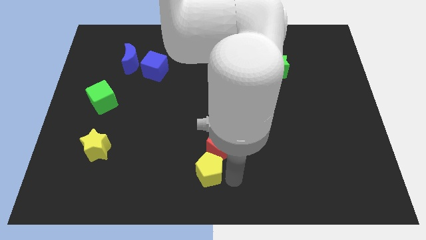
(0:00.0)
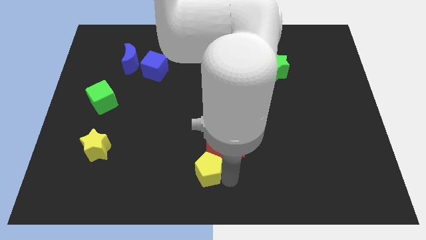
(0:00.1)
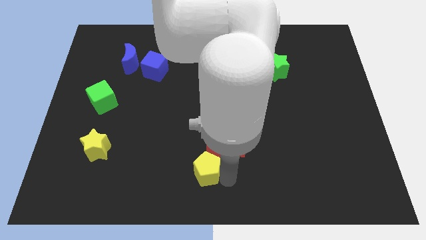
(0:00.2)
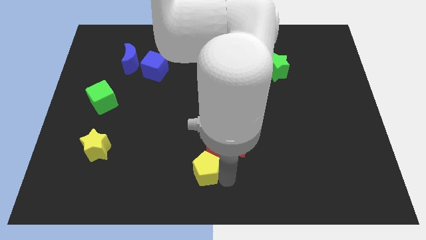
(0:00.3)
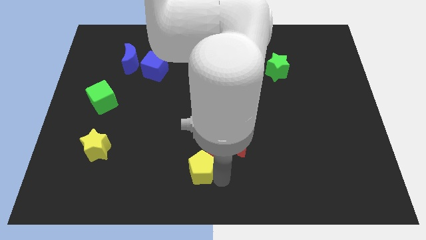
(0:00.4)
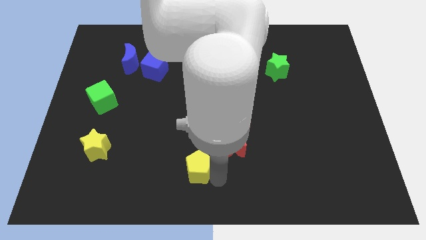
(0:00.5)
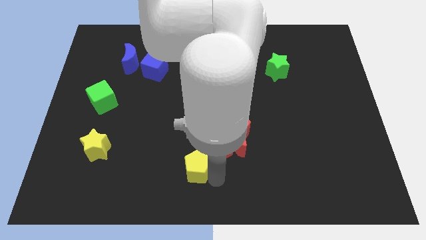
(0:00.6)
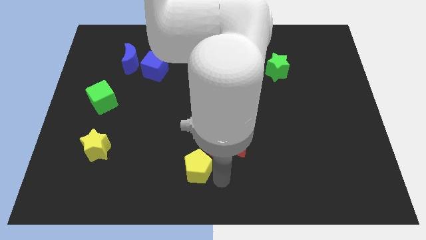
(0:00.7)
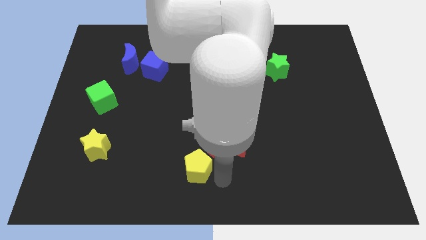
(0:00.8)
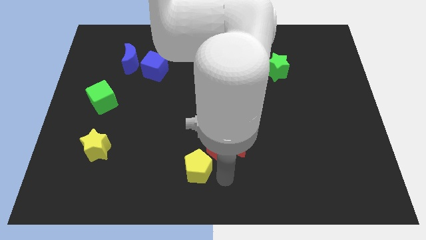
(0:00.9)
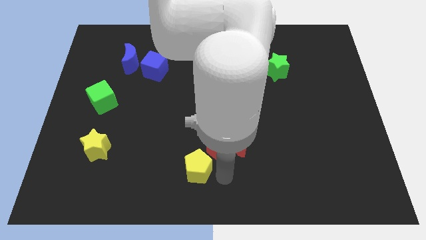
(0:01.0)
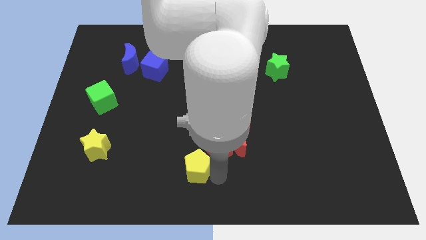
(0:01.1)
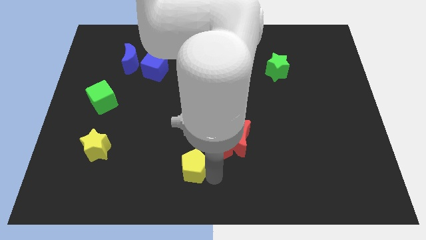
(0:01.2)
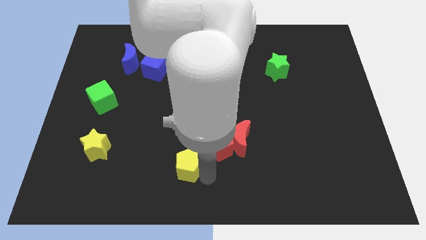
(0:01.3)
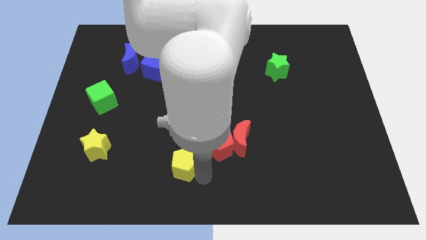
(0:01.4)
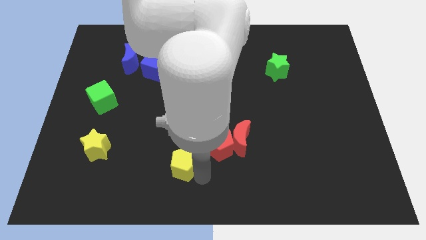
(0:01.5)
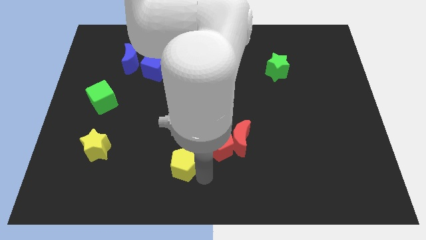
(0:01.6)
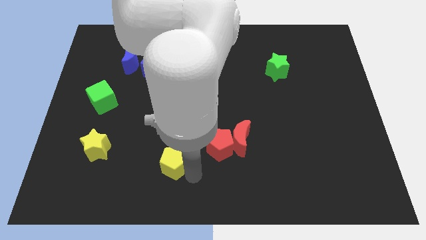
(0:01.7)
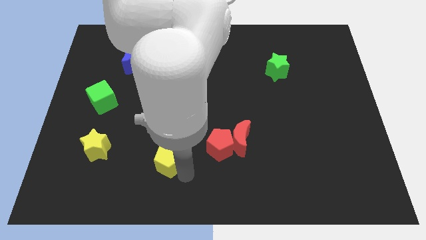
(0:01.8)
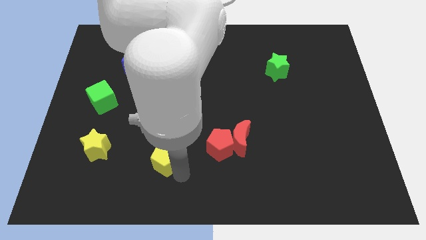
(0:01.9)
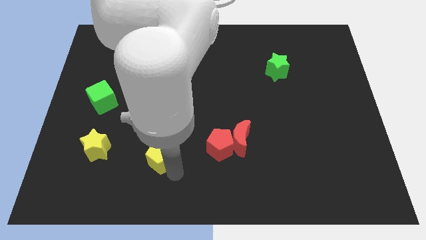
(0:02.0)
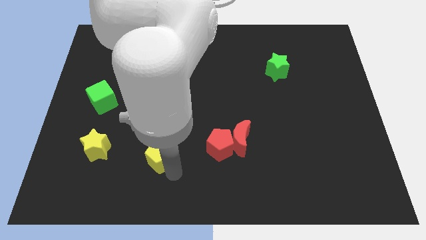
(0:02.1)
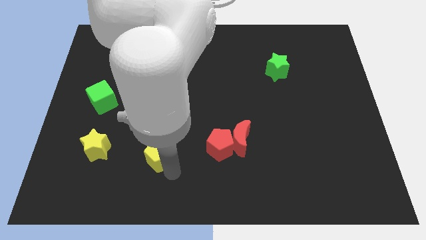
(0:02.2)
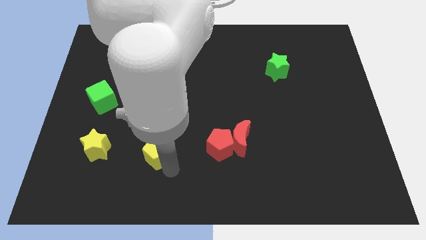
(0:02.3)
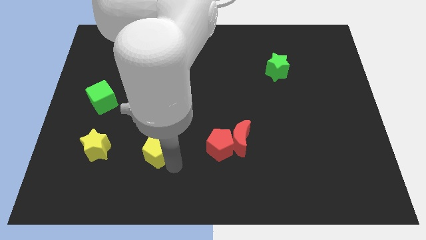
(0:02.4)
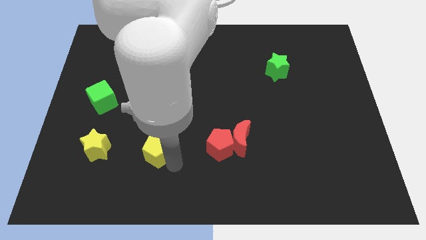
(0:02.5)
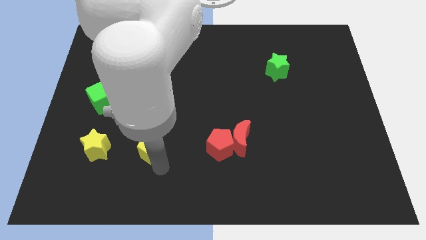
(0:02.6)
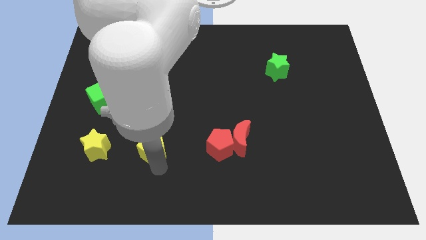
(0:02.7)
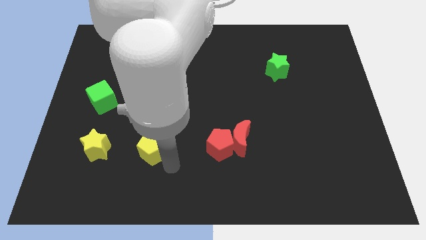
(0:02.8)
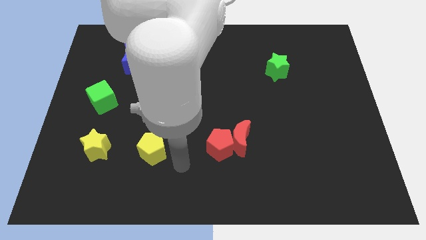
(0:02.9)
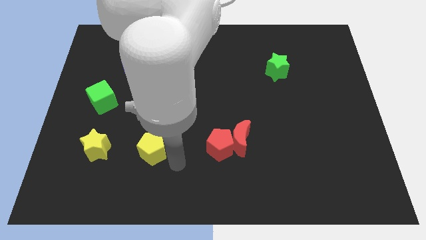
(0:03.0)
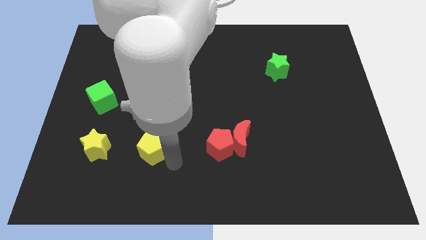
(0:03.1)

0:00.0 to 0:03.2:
move the yellow pentagon towards the yellow star

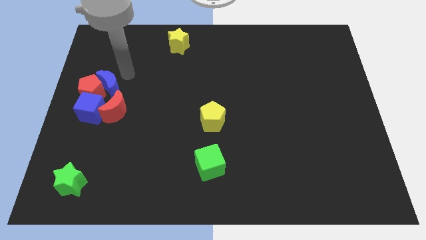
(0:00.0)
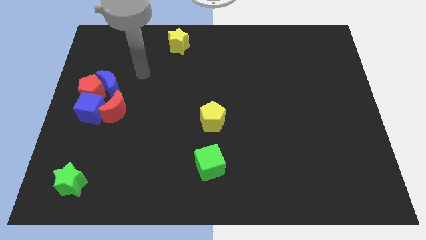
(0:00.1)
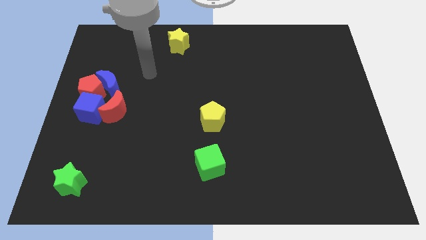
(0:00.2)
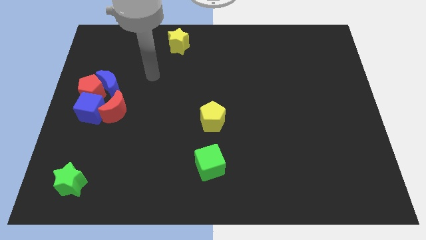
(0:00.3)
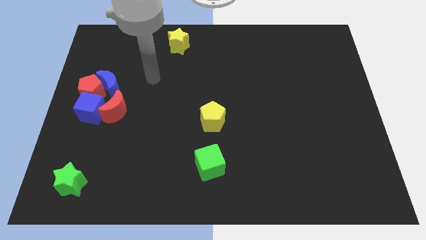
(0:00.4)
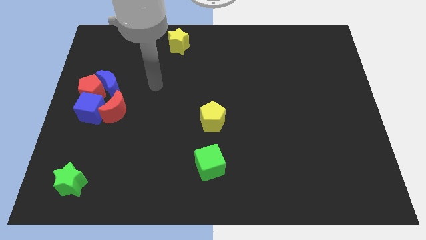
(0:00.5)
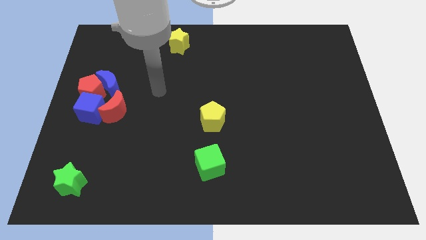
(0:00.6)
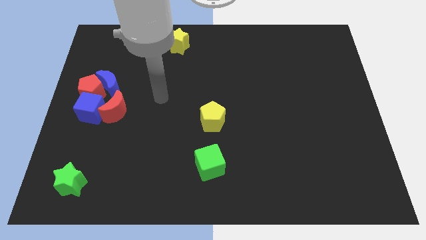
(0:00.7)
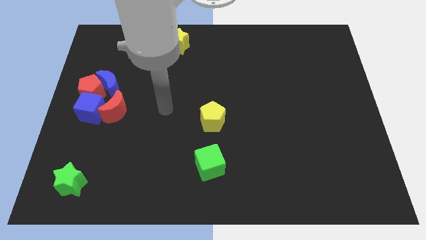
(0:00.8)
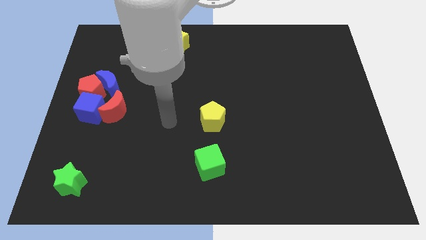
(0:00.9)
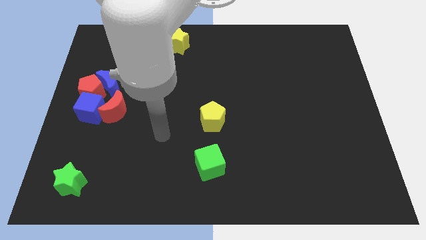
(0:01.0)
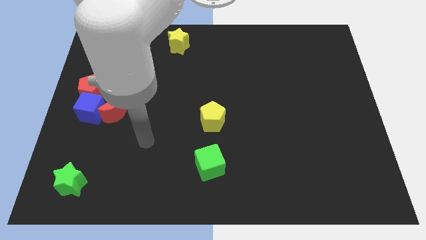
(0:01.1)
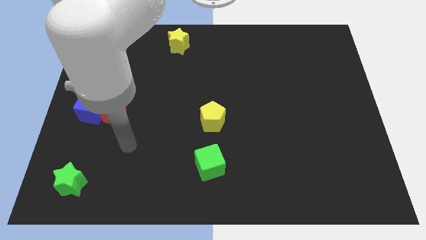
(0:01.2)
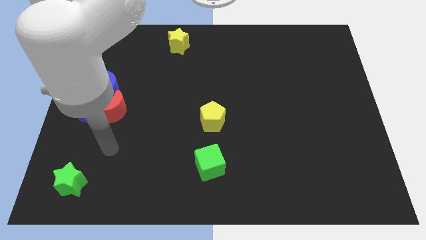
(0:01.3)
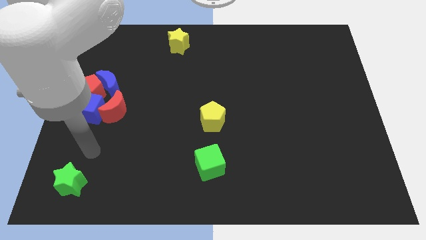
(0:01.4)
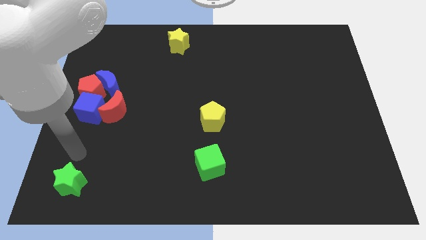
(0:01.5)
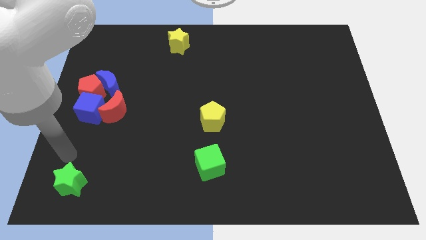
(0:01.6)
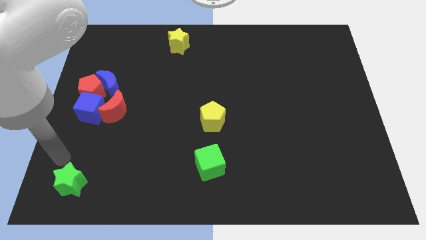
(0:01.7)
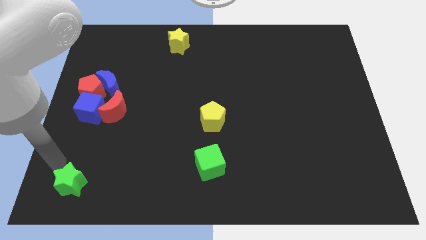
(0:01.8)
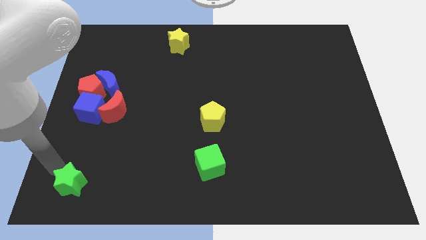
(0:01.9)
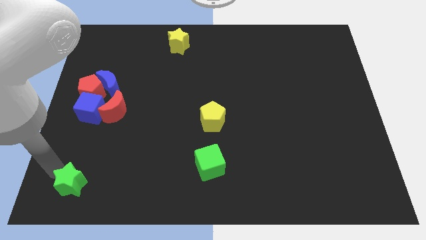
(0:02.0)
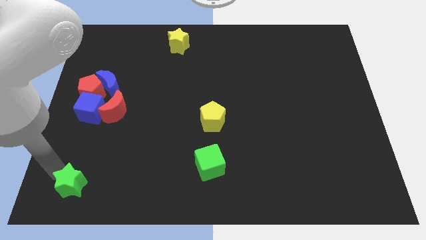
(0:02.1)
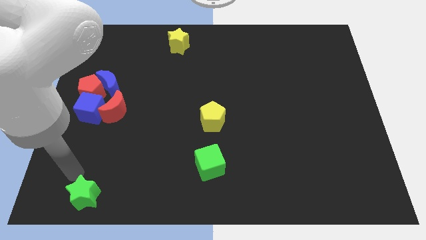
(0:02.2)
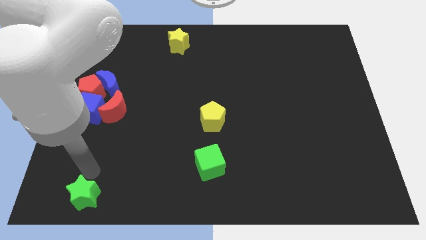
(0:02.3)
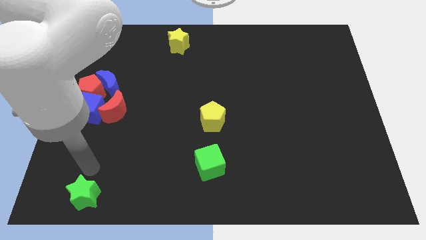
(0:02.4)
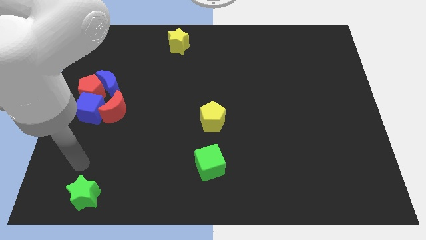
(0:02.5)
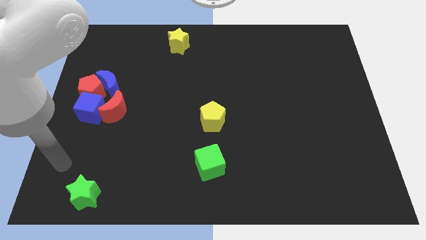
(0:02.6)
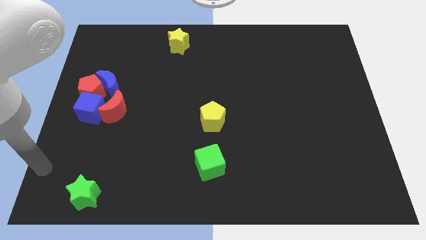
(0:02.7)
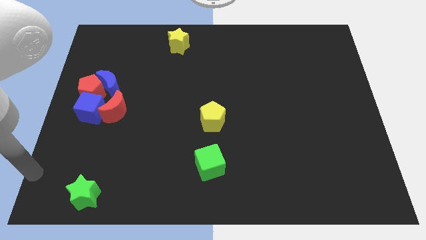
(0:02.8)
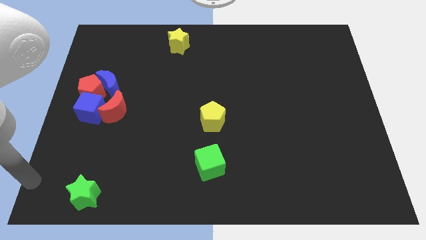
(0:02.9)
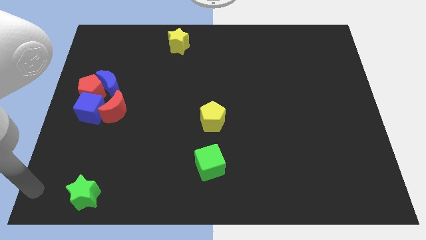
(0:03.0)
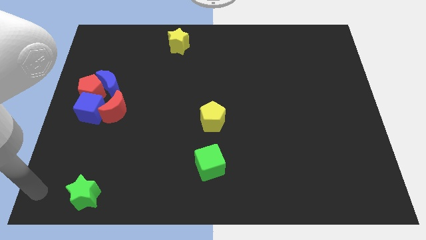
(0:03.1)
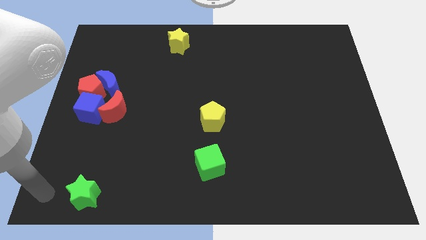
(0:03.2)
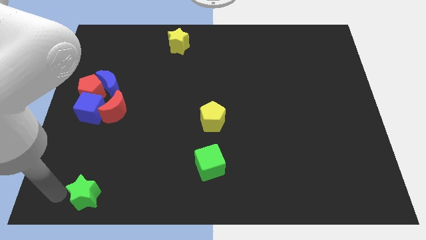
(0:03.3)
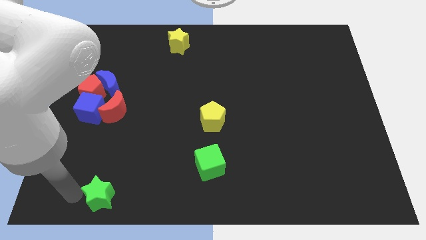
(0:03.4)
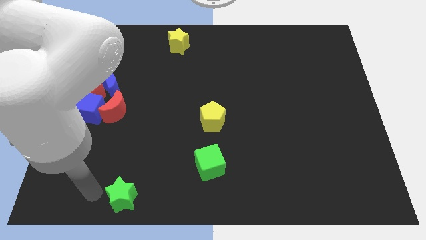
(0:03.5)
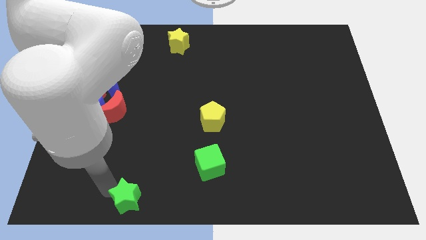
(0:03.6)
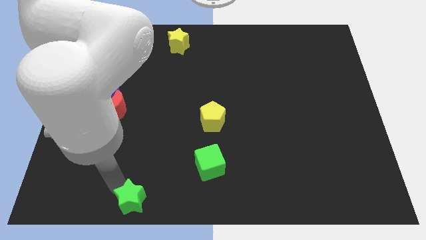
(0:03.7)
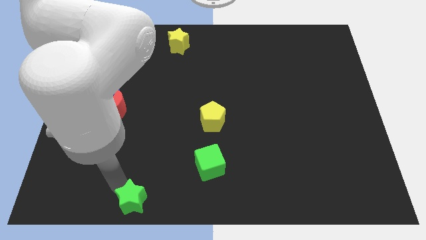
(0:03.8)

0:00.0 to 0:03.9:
push the green star to the right of the board

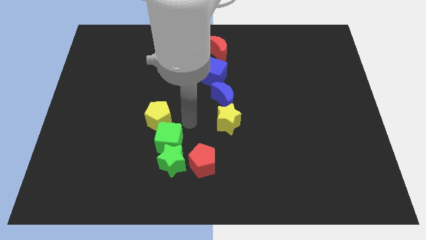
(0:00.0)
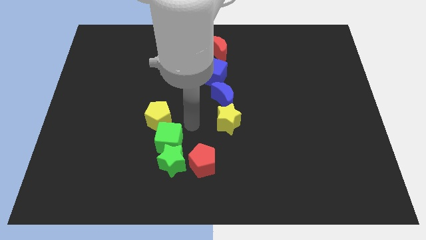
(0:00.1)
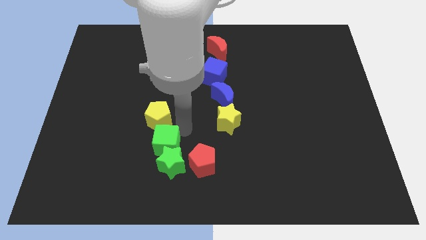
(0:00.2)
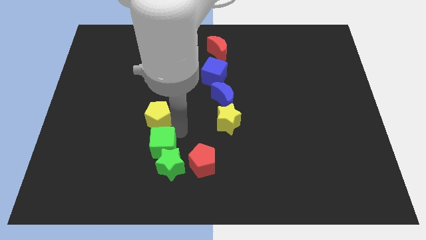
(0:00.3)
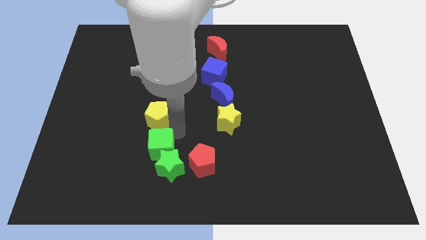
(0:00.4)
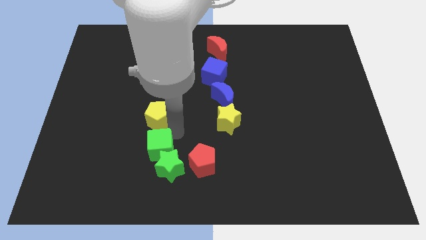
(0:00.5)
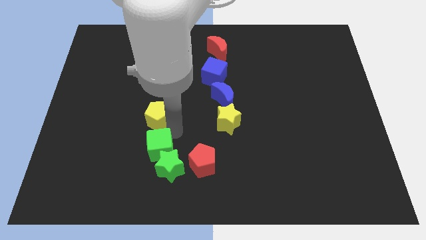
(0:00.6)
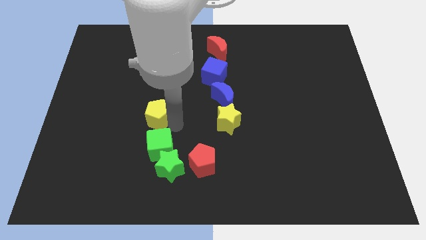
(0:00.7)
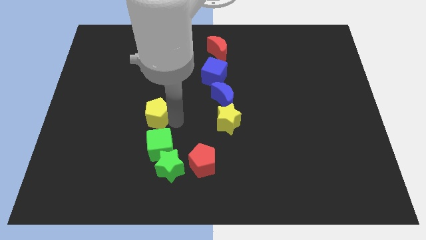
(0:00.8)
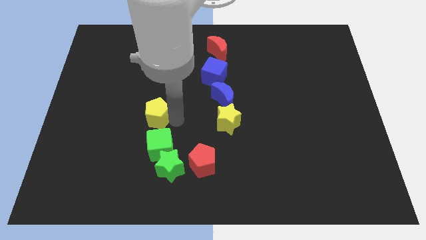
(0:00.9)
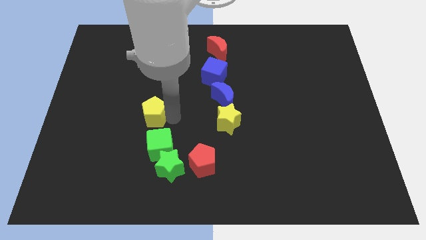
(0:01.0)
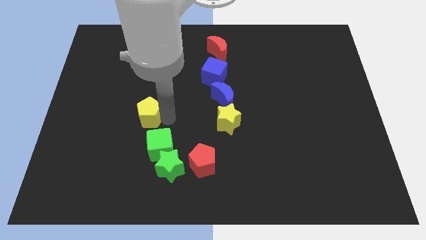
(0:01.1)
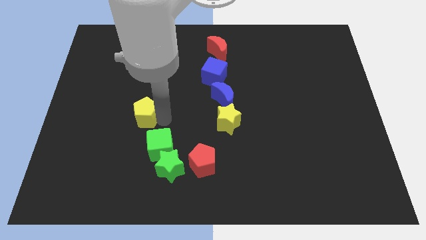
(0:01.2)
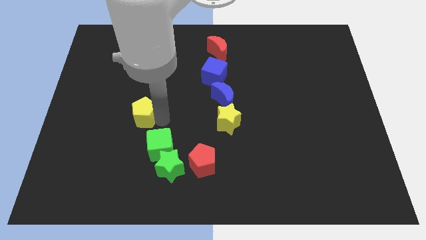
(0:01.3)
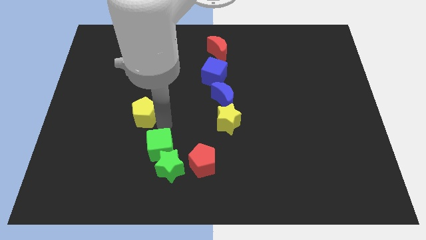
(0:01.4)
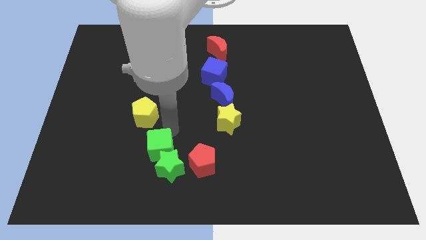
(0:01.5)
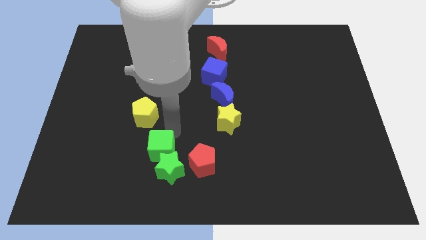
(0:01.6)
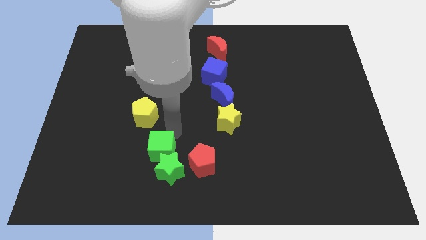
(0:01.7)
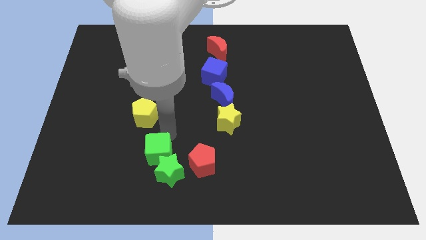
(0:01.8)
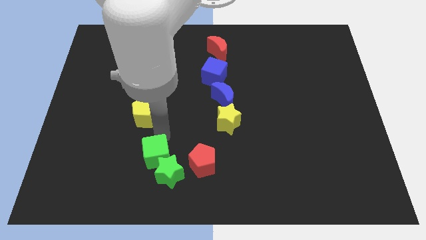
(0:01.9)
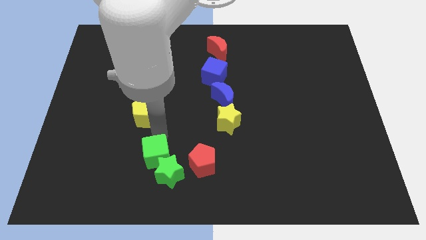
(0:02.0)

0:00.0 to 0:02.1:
separate green cube and yellow pentagon
